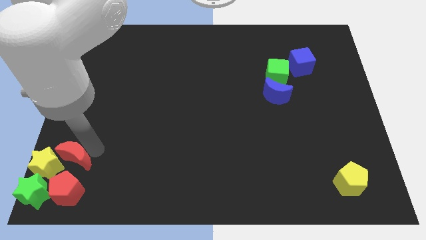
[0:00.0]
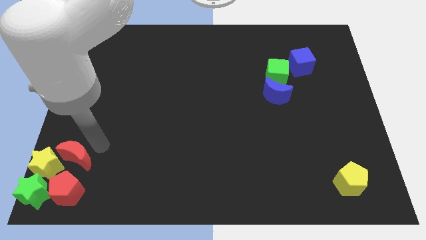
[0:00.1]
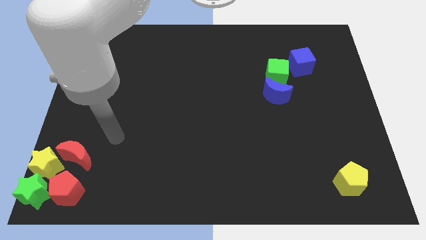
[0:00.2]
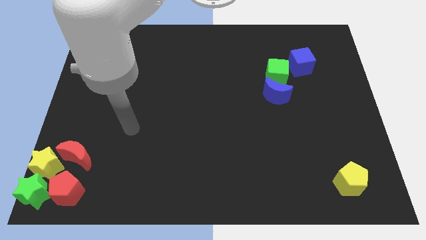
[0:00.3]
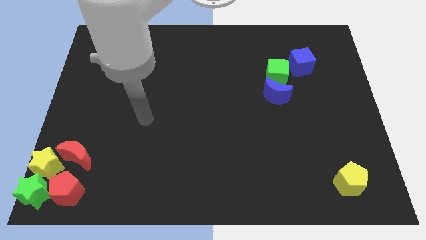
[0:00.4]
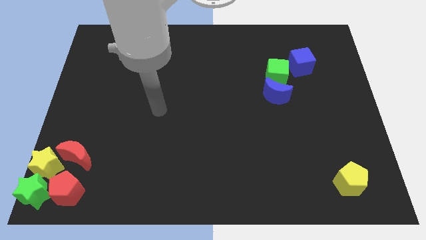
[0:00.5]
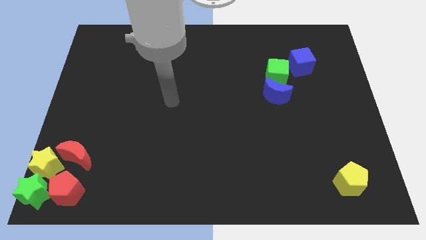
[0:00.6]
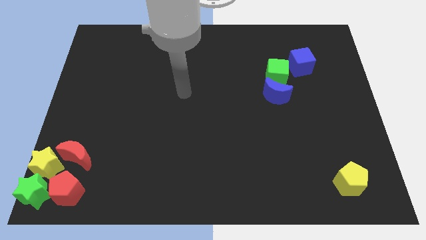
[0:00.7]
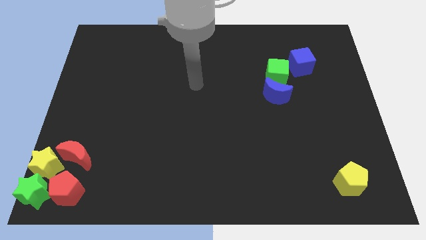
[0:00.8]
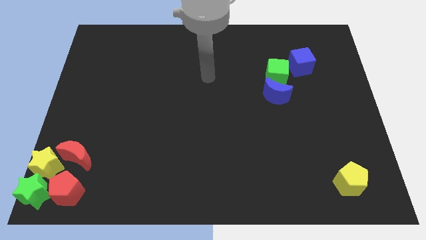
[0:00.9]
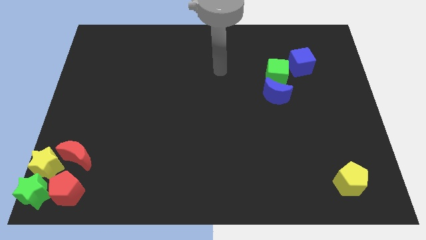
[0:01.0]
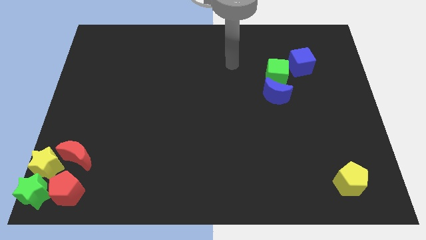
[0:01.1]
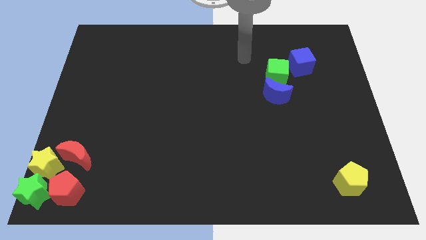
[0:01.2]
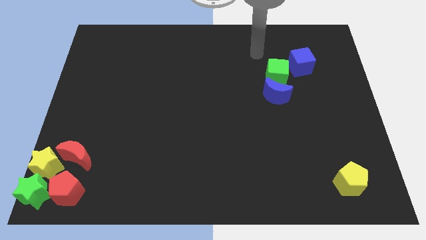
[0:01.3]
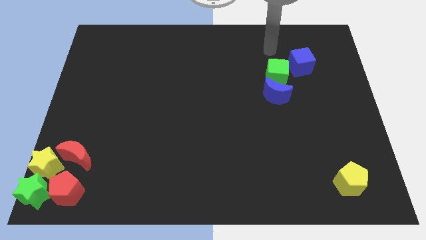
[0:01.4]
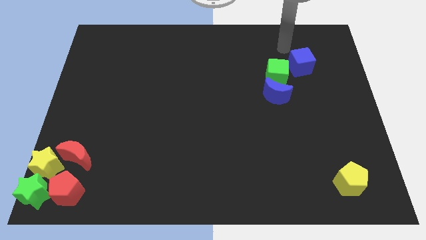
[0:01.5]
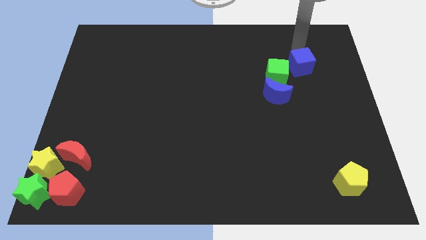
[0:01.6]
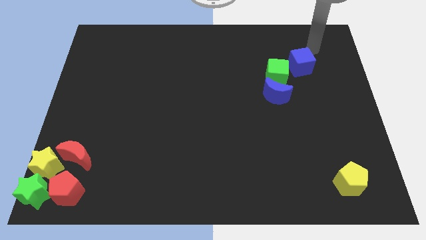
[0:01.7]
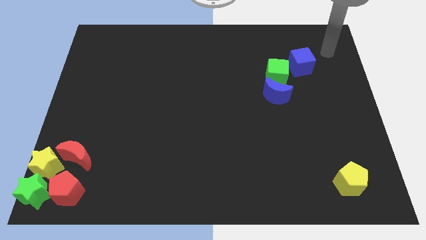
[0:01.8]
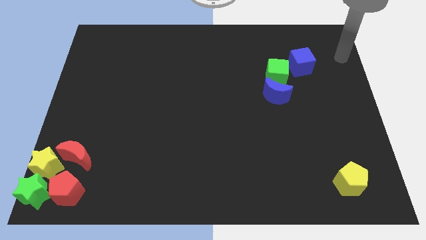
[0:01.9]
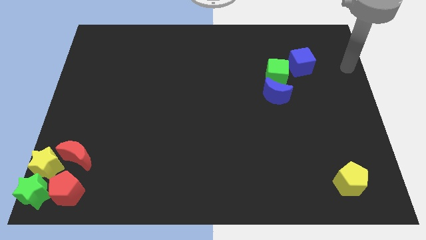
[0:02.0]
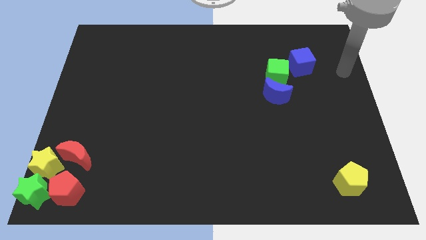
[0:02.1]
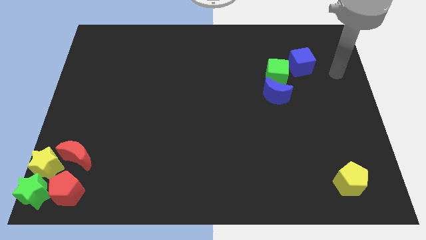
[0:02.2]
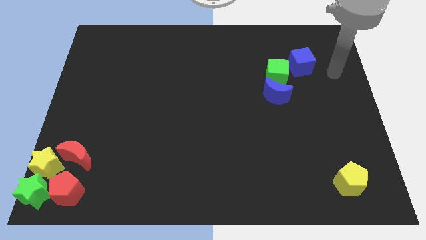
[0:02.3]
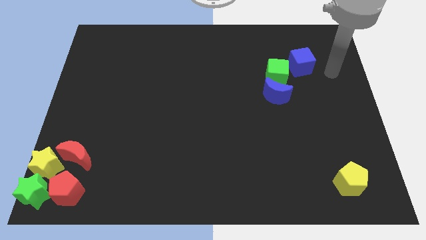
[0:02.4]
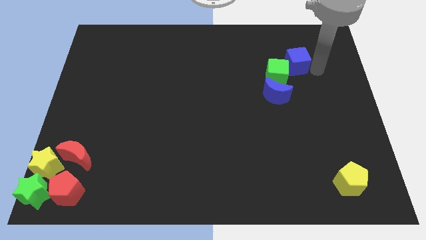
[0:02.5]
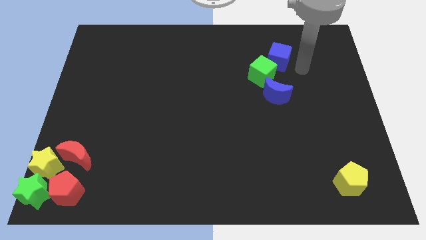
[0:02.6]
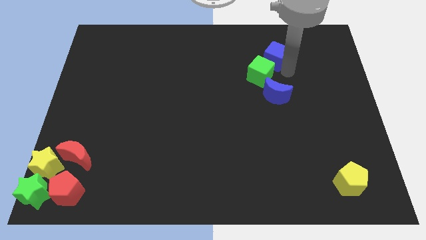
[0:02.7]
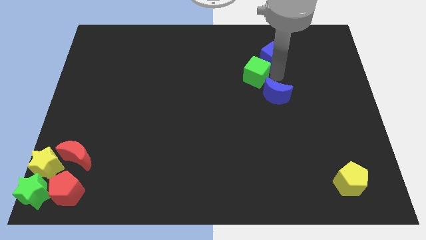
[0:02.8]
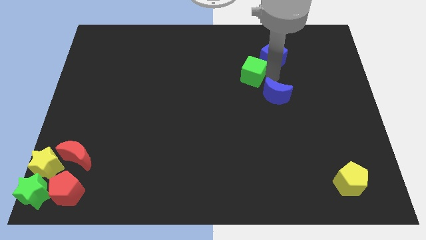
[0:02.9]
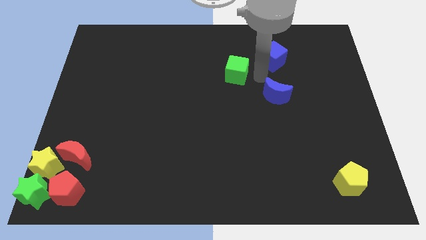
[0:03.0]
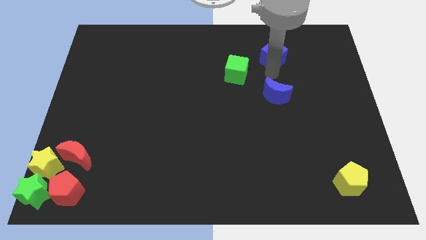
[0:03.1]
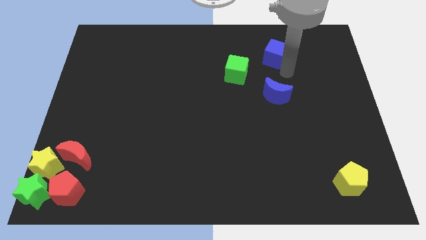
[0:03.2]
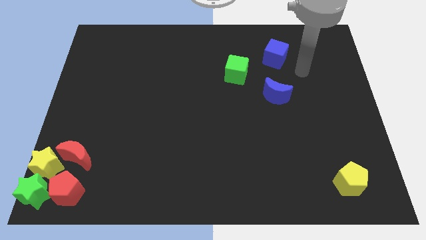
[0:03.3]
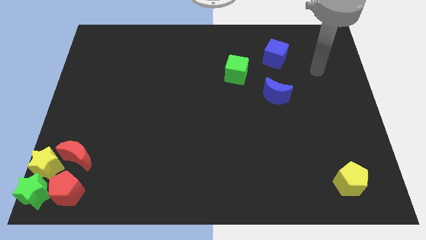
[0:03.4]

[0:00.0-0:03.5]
separate green cube and the blue cube

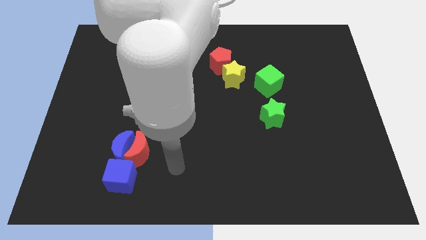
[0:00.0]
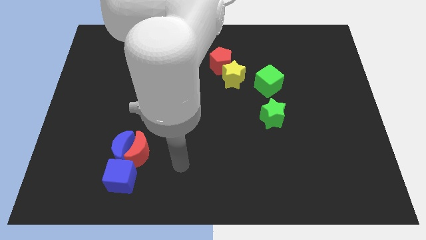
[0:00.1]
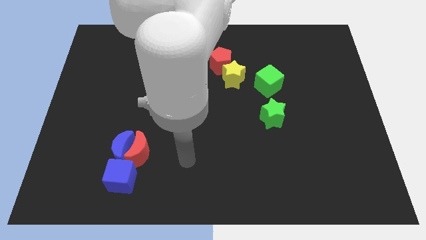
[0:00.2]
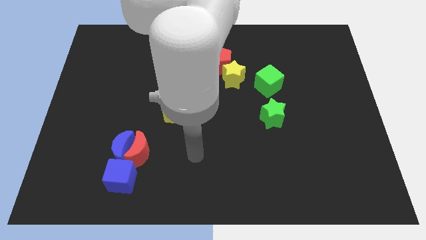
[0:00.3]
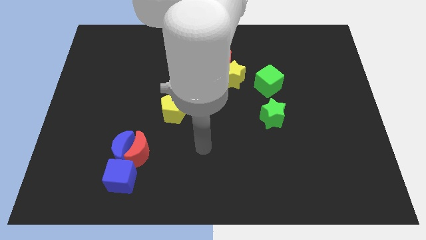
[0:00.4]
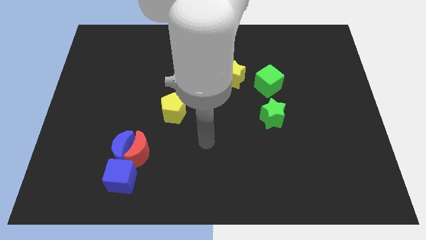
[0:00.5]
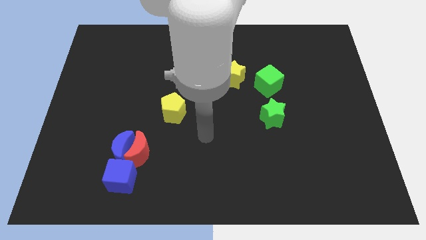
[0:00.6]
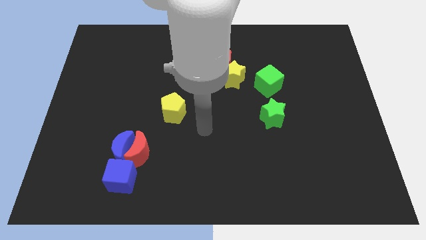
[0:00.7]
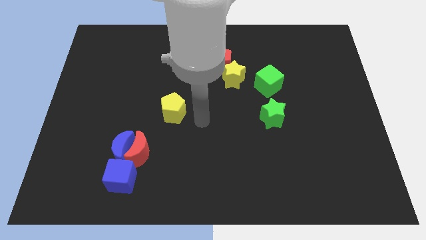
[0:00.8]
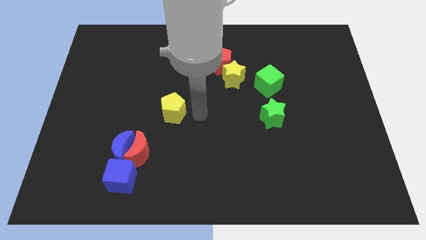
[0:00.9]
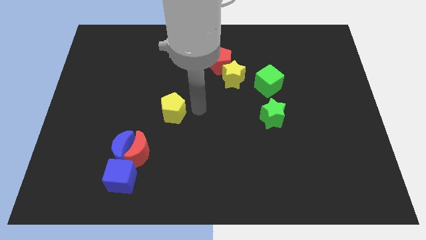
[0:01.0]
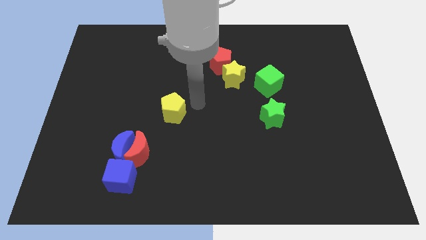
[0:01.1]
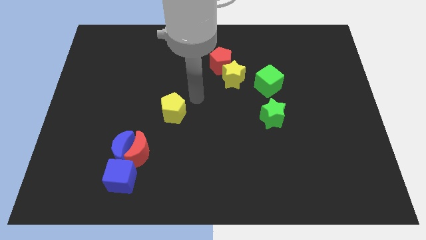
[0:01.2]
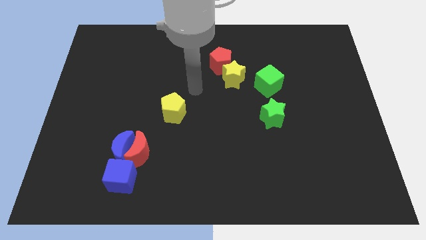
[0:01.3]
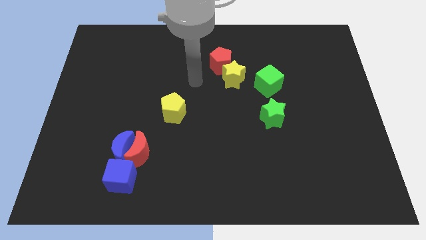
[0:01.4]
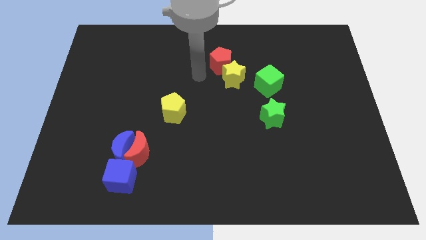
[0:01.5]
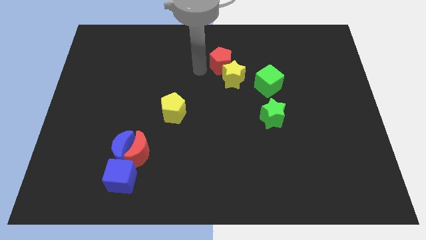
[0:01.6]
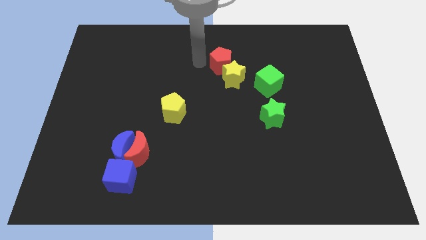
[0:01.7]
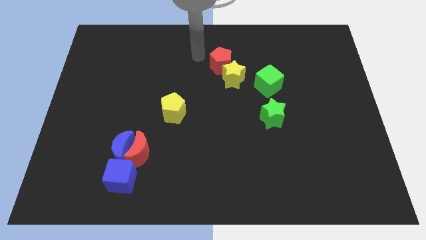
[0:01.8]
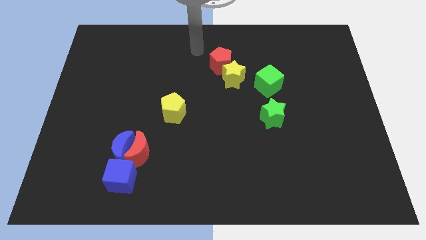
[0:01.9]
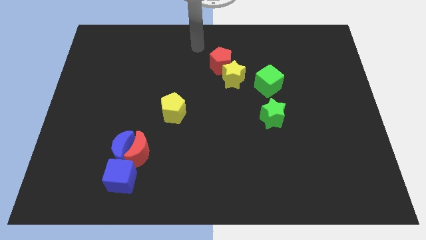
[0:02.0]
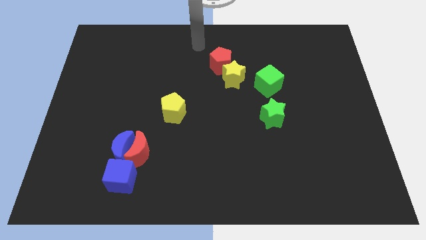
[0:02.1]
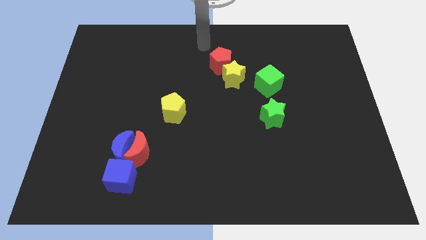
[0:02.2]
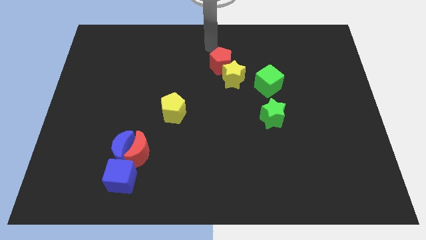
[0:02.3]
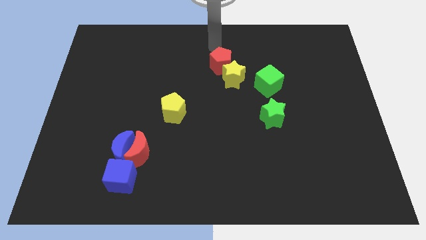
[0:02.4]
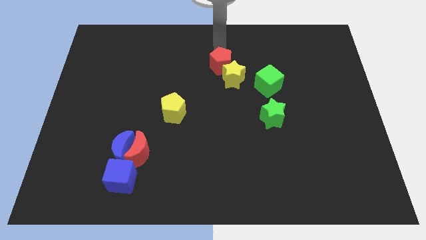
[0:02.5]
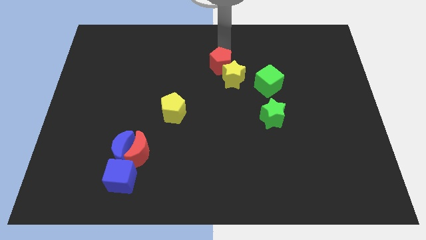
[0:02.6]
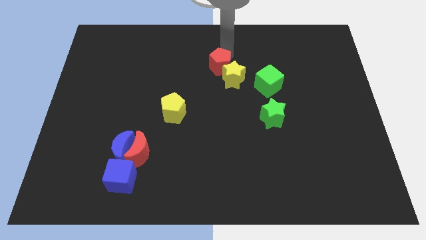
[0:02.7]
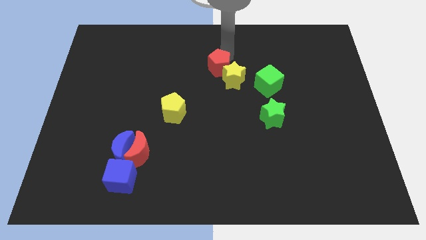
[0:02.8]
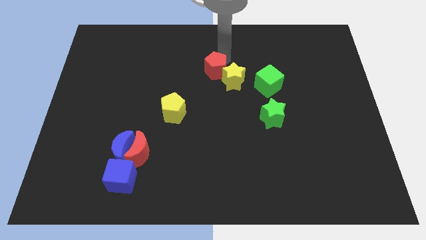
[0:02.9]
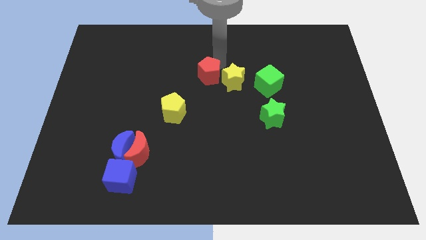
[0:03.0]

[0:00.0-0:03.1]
separate red pentagon and the yellow star

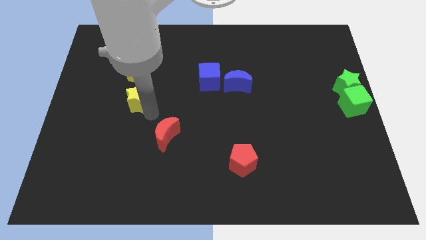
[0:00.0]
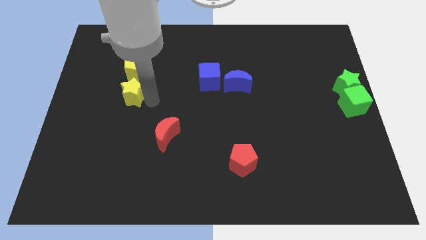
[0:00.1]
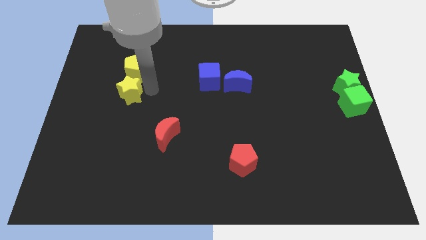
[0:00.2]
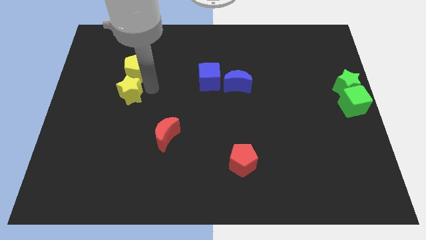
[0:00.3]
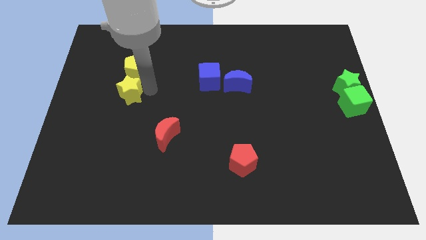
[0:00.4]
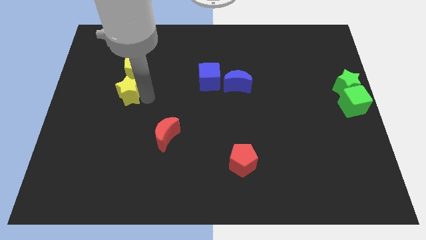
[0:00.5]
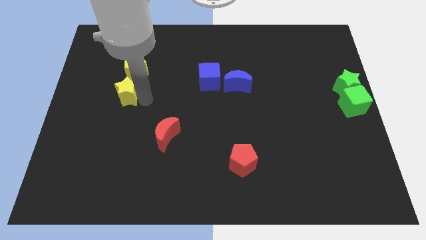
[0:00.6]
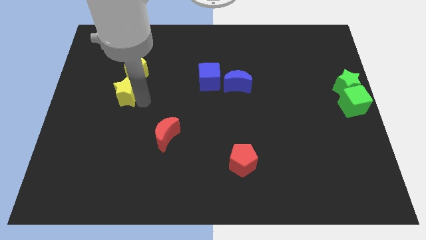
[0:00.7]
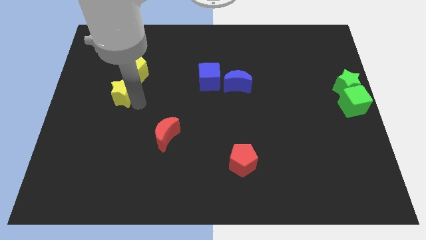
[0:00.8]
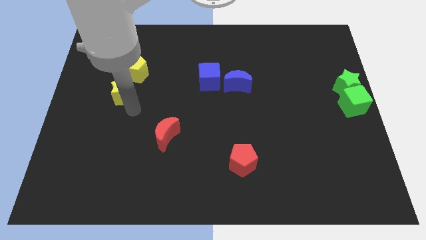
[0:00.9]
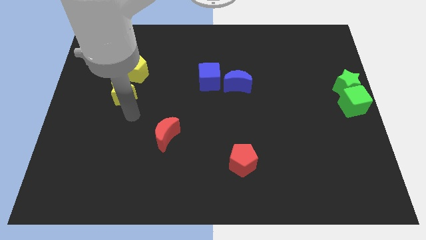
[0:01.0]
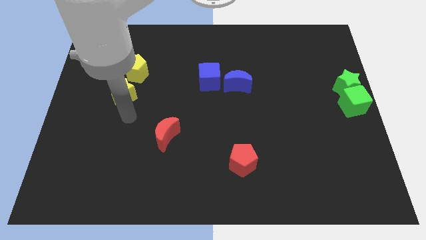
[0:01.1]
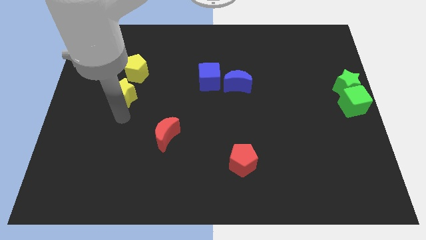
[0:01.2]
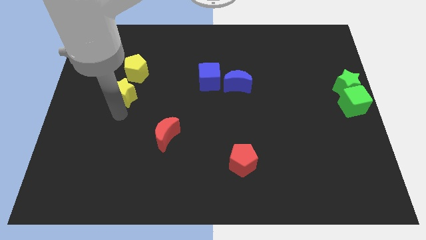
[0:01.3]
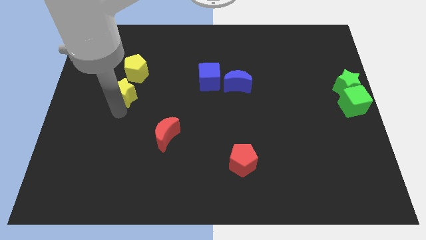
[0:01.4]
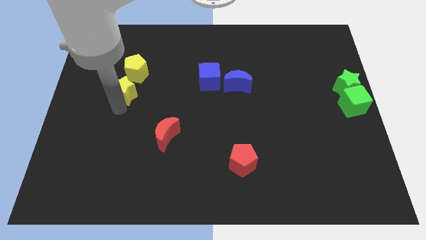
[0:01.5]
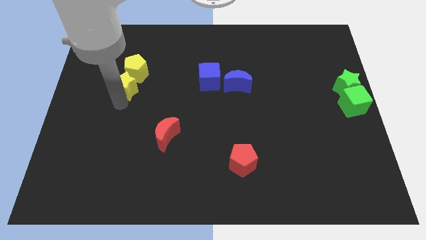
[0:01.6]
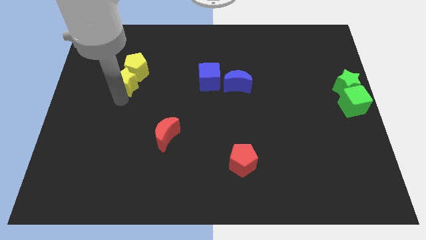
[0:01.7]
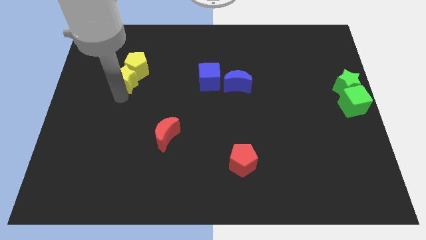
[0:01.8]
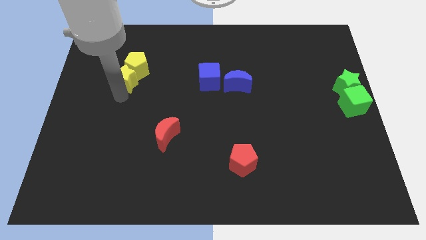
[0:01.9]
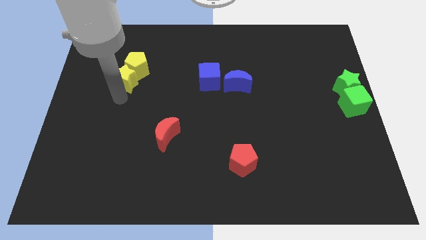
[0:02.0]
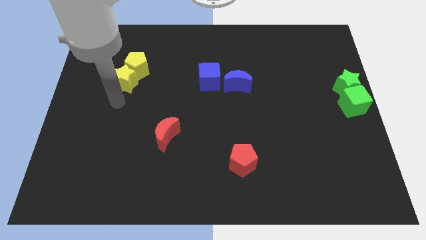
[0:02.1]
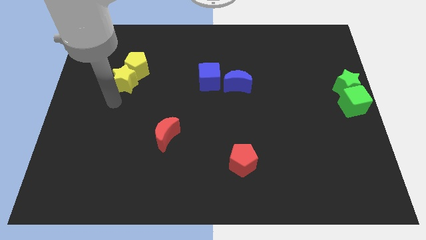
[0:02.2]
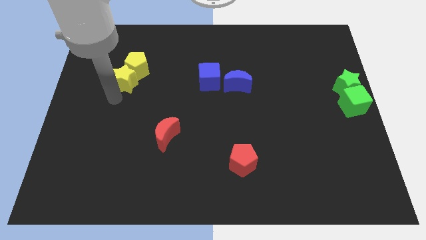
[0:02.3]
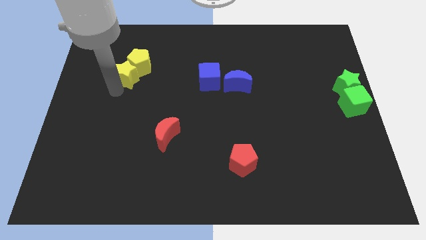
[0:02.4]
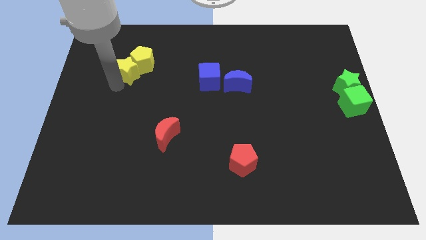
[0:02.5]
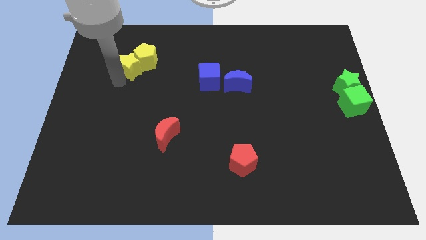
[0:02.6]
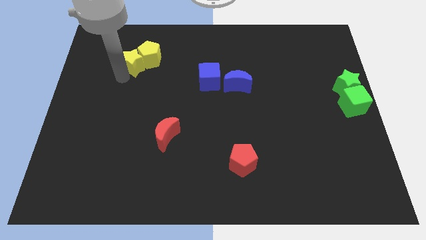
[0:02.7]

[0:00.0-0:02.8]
push the yellow star into the yellow pentagon
